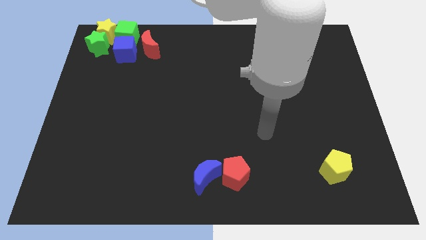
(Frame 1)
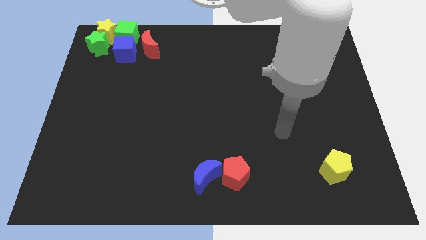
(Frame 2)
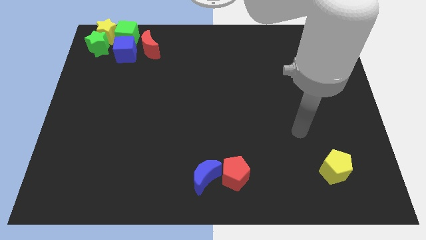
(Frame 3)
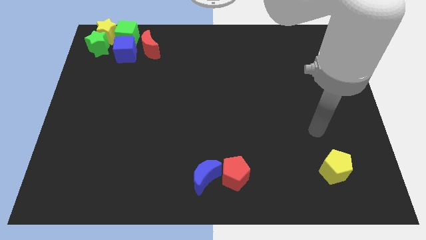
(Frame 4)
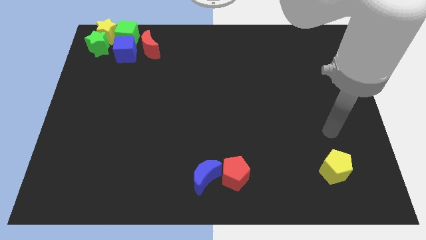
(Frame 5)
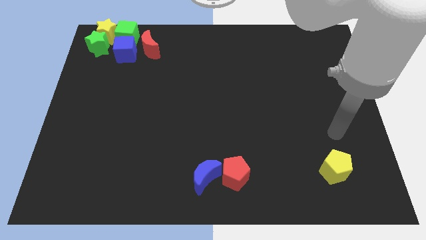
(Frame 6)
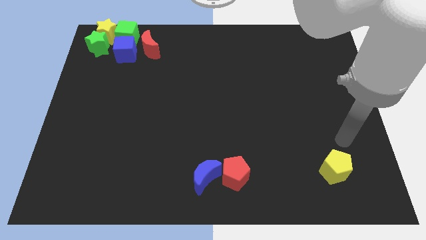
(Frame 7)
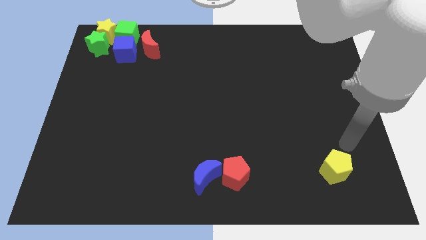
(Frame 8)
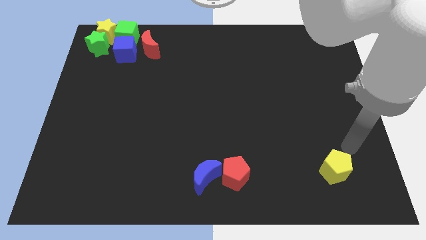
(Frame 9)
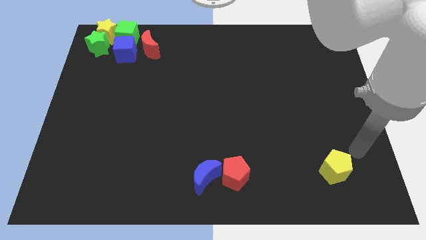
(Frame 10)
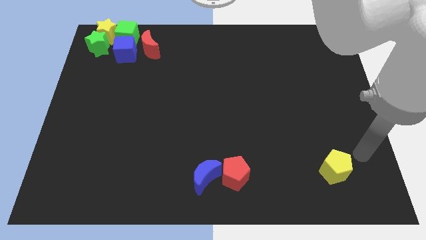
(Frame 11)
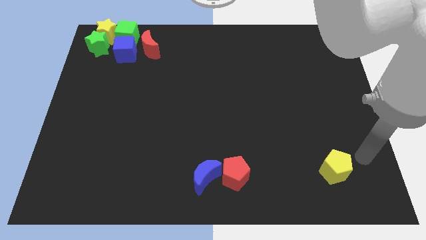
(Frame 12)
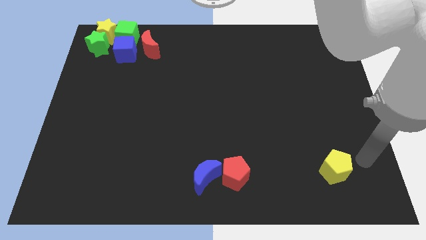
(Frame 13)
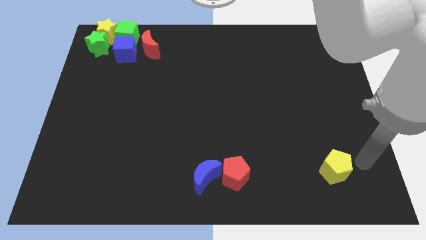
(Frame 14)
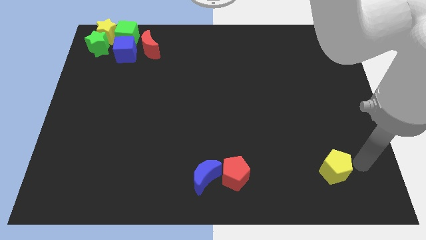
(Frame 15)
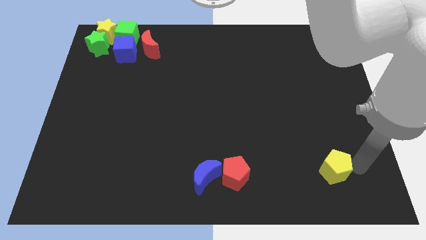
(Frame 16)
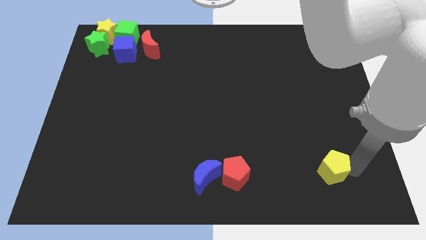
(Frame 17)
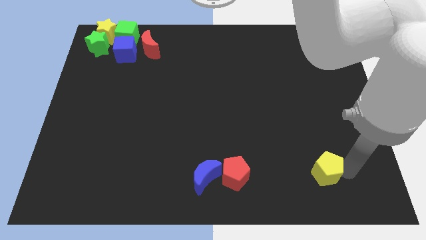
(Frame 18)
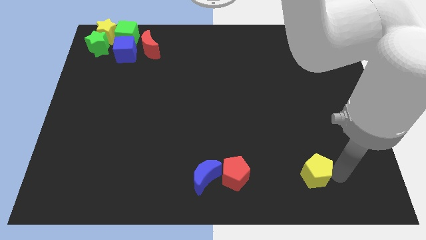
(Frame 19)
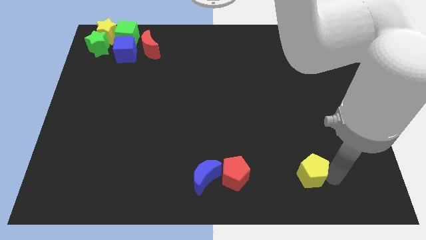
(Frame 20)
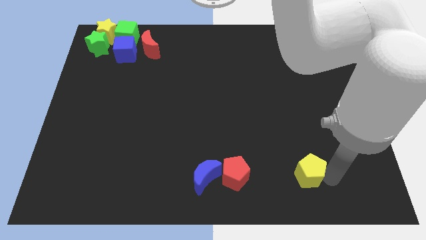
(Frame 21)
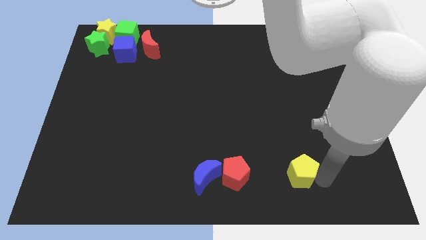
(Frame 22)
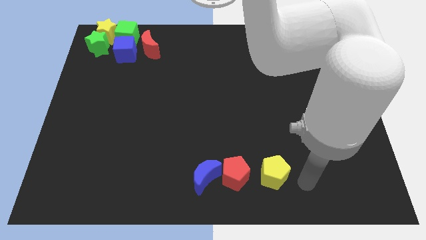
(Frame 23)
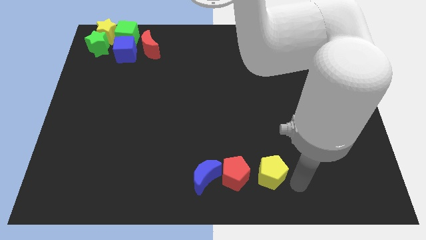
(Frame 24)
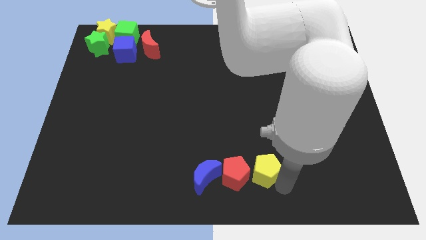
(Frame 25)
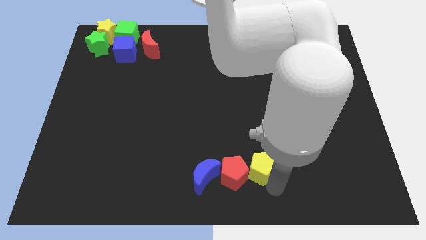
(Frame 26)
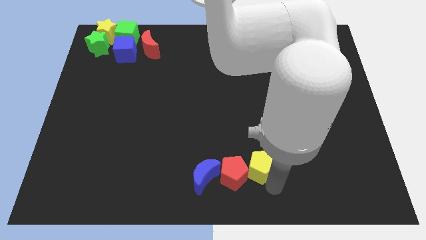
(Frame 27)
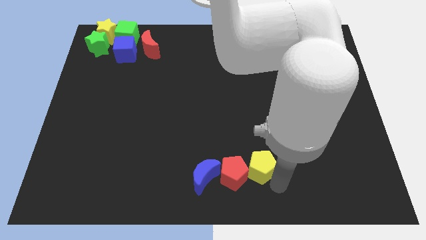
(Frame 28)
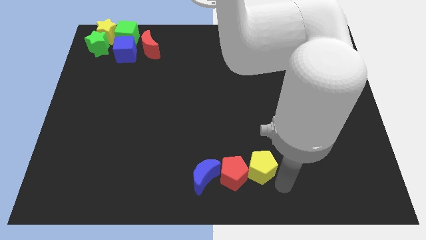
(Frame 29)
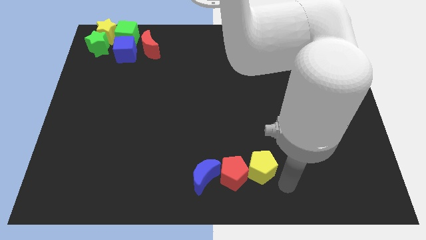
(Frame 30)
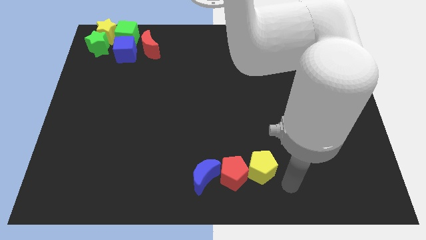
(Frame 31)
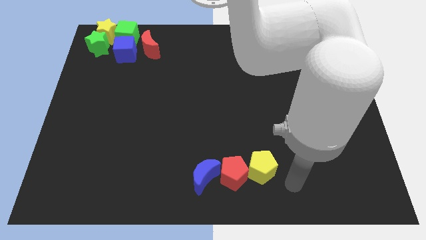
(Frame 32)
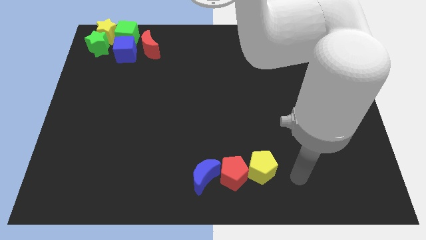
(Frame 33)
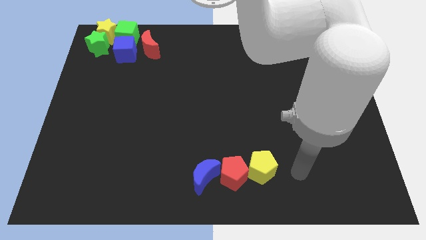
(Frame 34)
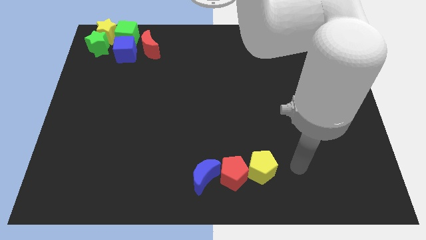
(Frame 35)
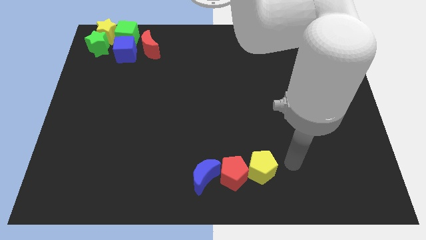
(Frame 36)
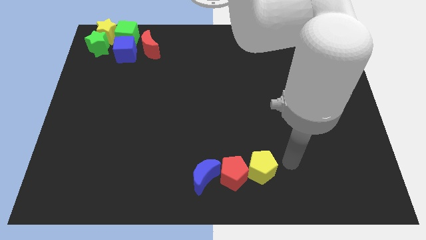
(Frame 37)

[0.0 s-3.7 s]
push the yellow pentagon to the right side of the red pentagon

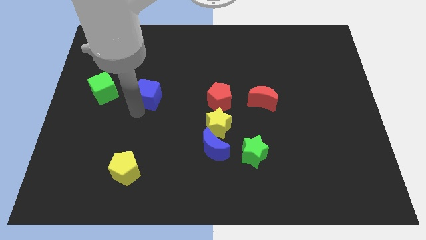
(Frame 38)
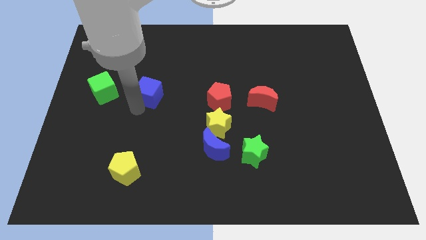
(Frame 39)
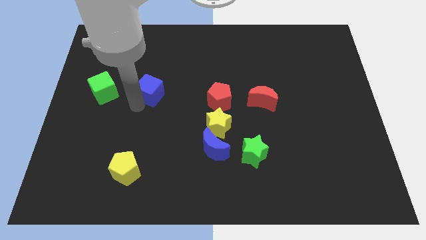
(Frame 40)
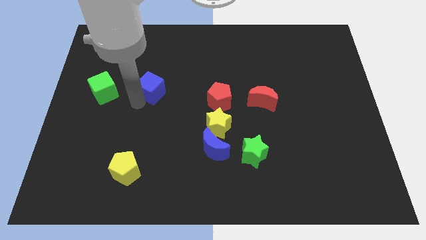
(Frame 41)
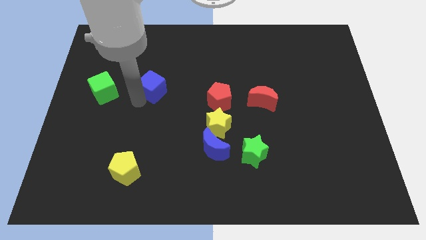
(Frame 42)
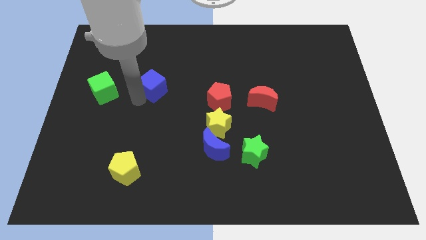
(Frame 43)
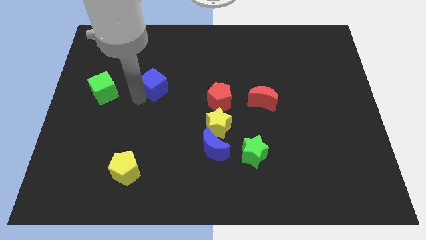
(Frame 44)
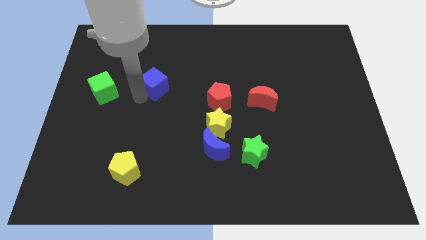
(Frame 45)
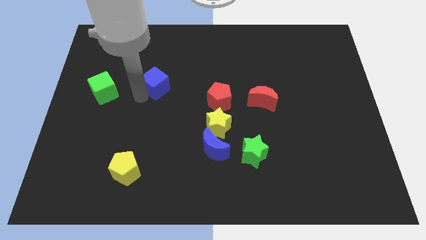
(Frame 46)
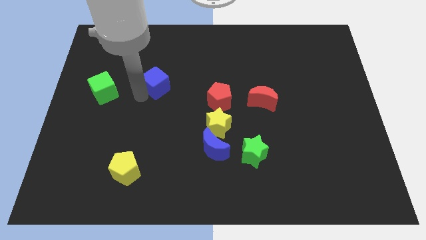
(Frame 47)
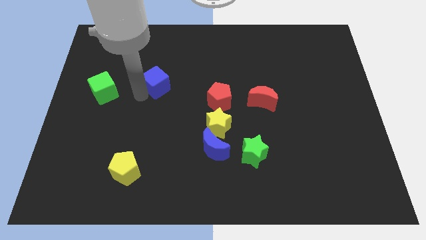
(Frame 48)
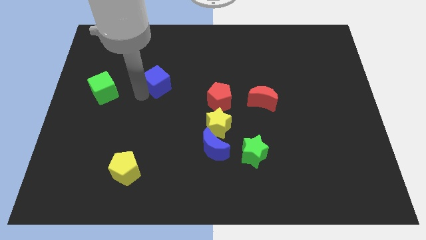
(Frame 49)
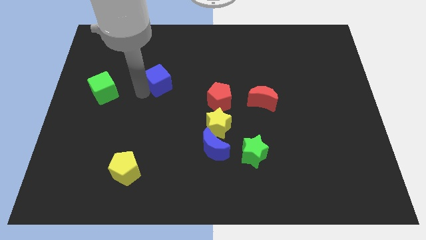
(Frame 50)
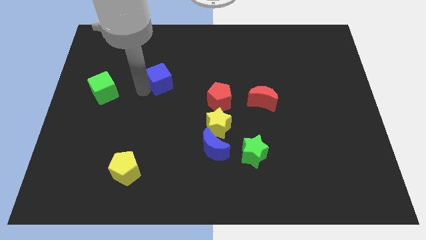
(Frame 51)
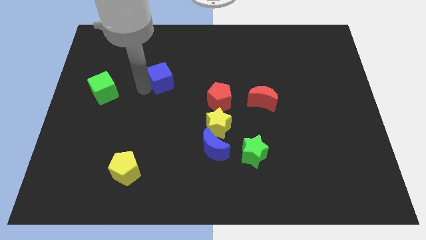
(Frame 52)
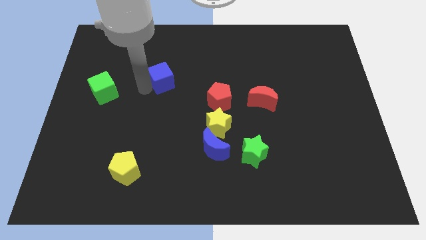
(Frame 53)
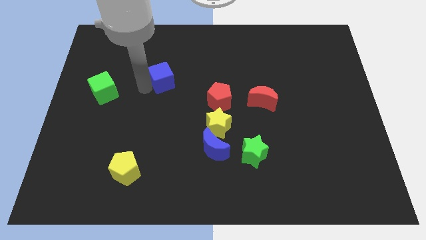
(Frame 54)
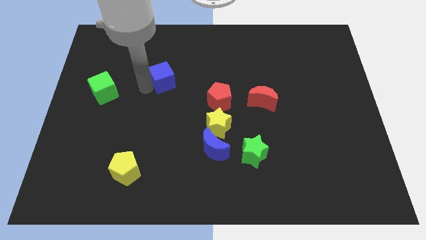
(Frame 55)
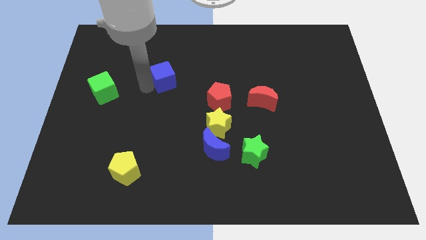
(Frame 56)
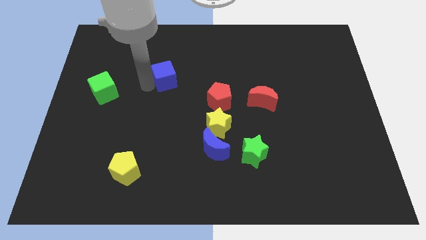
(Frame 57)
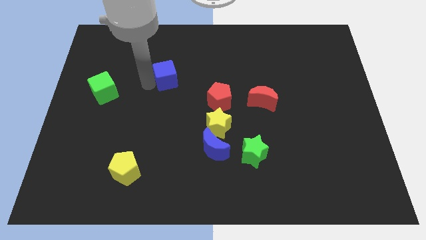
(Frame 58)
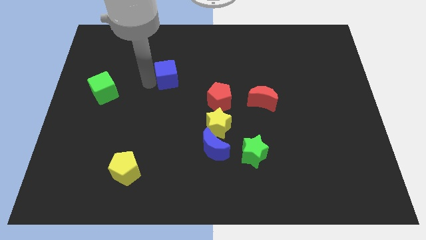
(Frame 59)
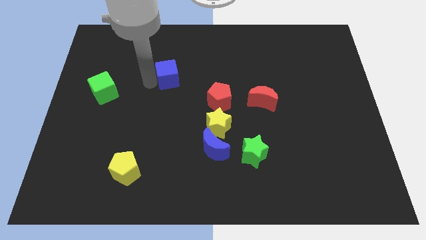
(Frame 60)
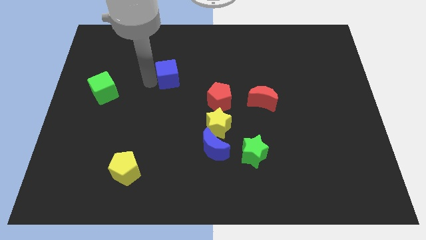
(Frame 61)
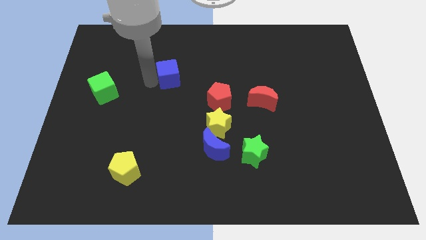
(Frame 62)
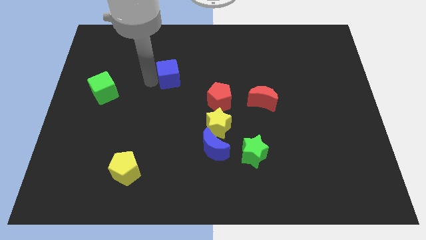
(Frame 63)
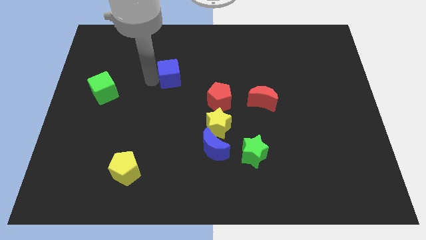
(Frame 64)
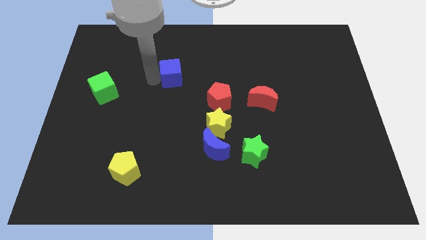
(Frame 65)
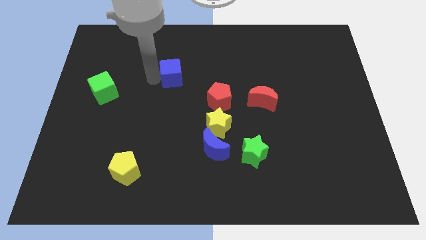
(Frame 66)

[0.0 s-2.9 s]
push the blue cube towards the top side of the board

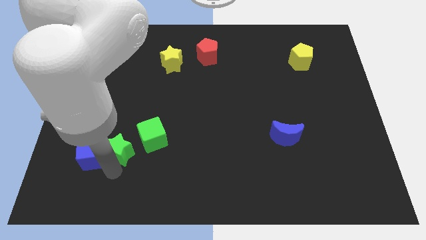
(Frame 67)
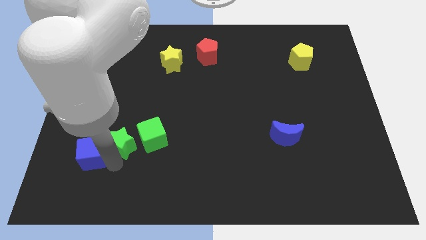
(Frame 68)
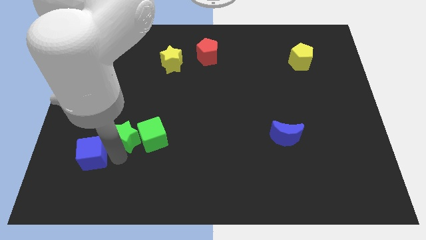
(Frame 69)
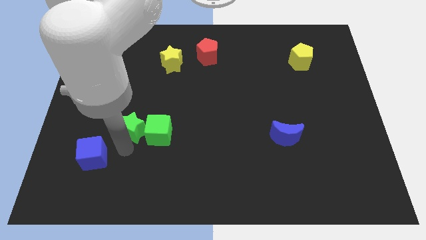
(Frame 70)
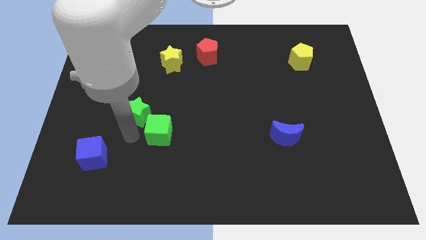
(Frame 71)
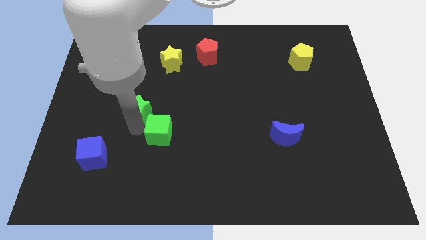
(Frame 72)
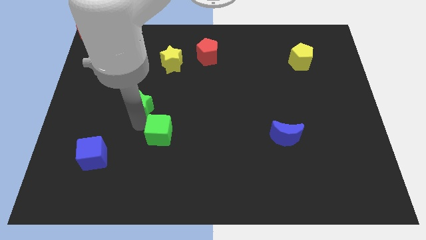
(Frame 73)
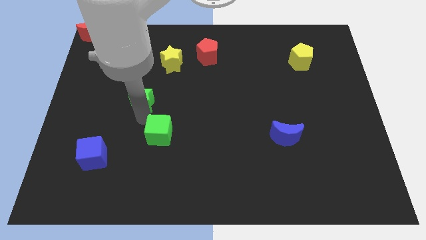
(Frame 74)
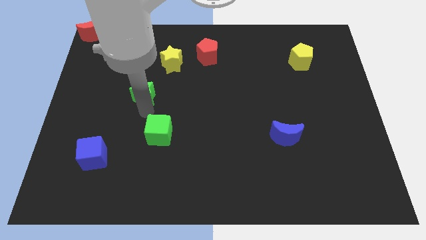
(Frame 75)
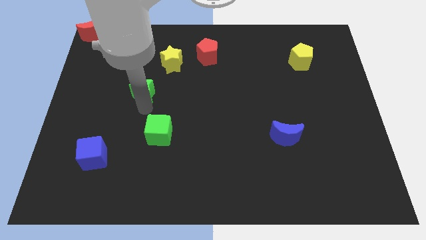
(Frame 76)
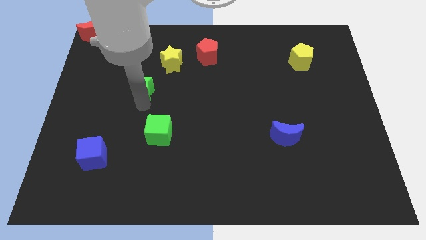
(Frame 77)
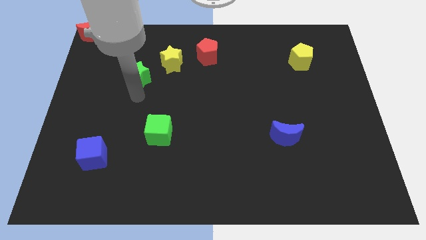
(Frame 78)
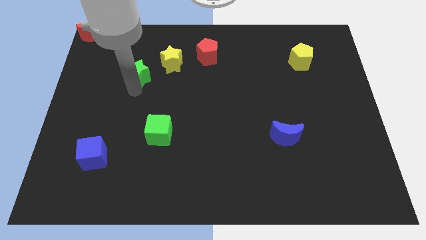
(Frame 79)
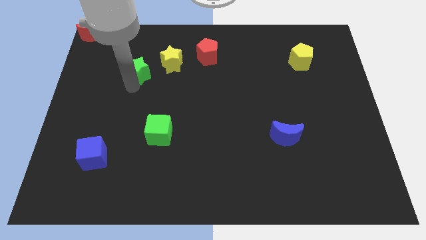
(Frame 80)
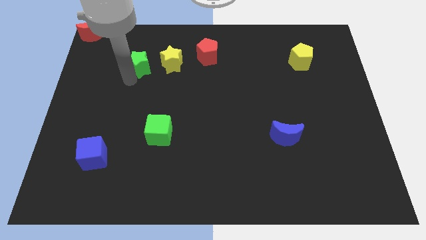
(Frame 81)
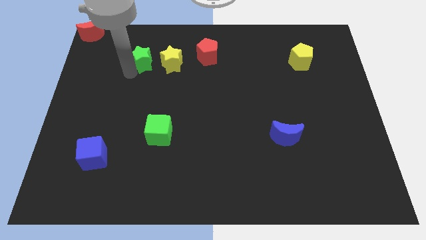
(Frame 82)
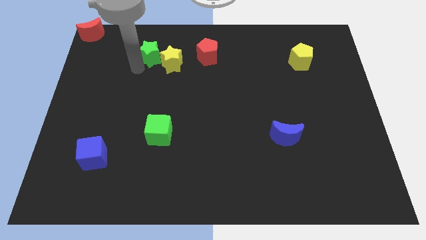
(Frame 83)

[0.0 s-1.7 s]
move the green star to the left of the yellow star

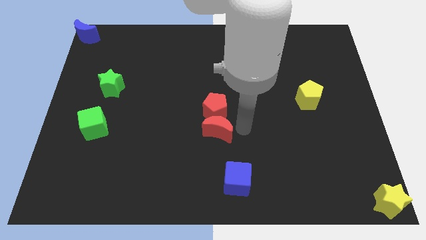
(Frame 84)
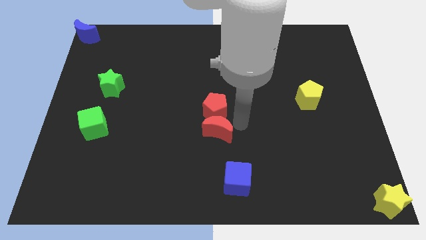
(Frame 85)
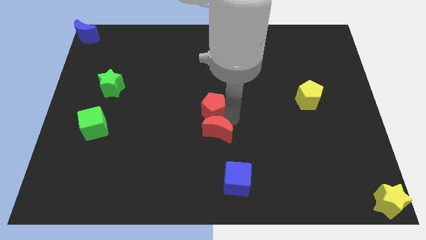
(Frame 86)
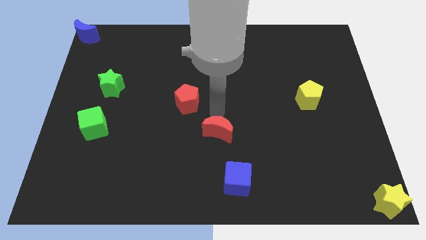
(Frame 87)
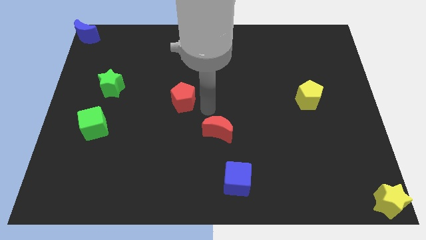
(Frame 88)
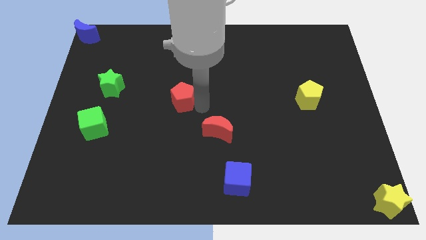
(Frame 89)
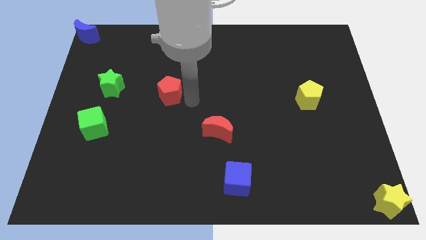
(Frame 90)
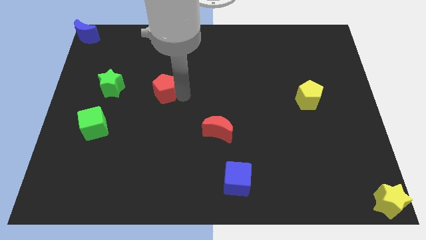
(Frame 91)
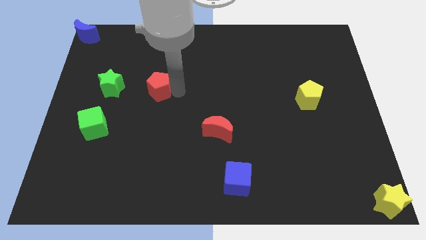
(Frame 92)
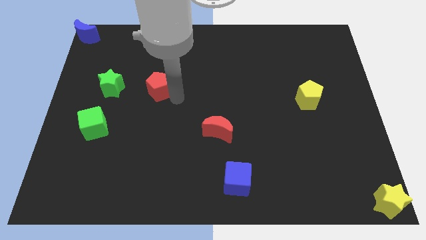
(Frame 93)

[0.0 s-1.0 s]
push red pentagon away from red crescent
